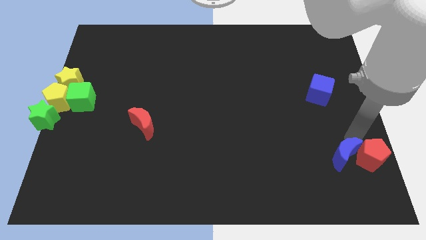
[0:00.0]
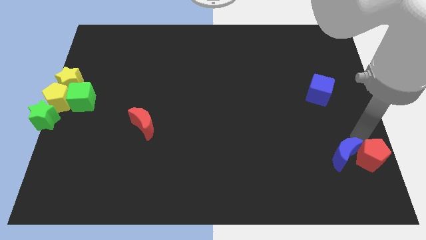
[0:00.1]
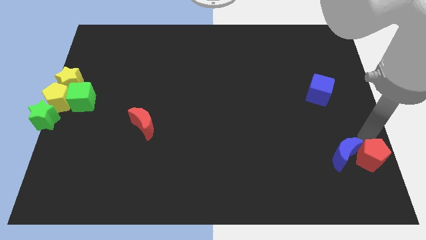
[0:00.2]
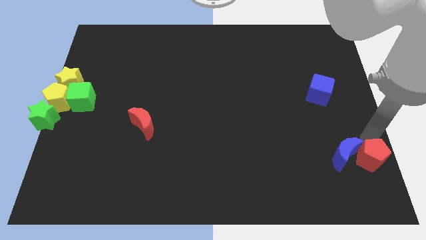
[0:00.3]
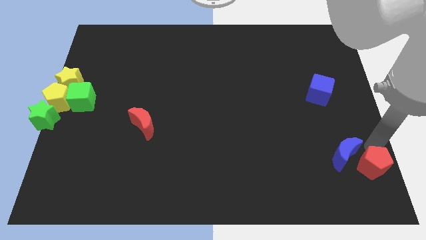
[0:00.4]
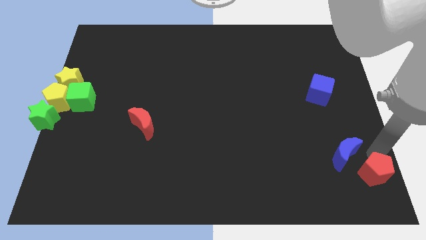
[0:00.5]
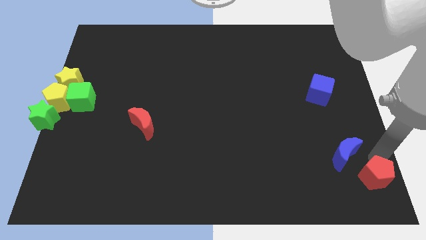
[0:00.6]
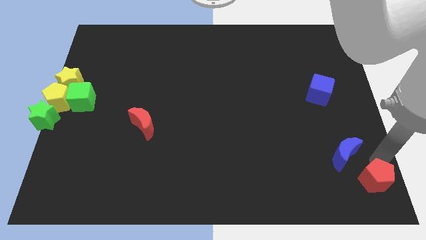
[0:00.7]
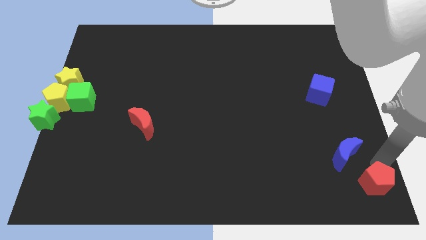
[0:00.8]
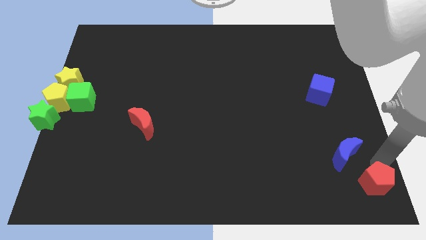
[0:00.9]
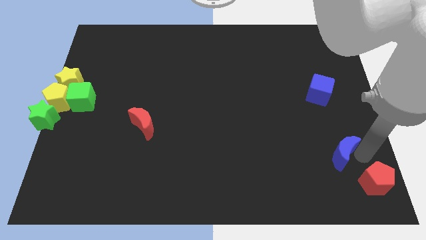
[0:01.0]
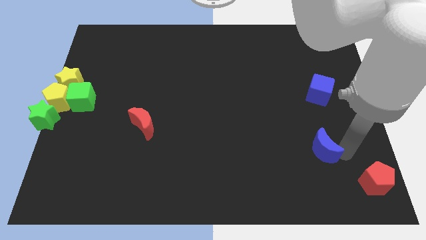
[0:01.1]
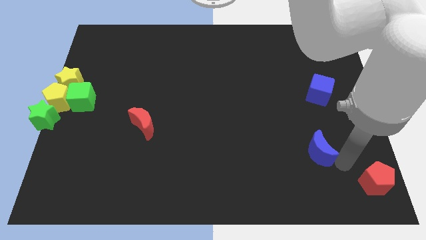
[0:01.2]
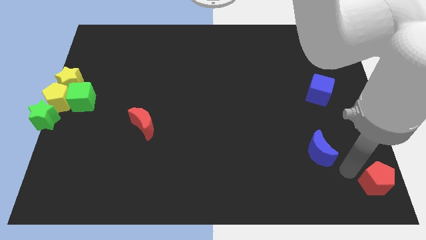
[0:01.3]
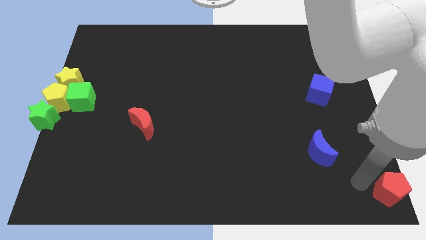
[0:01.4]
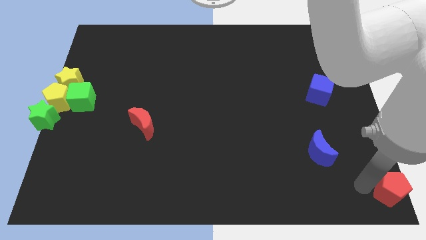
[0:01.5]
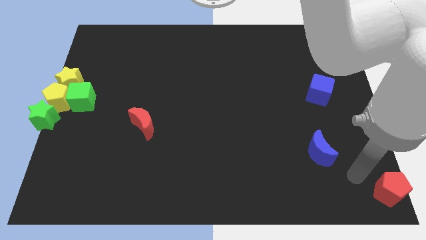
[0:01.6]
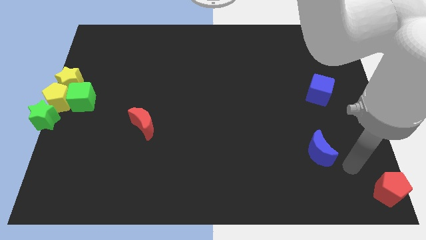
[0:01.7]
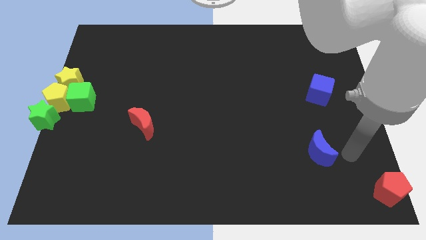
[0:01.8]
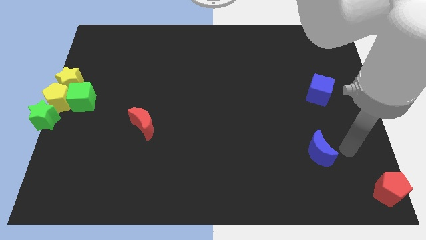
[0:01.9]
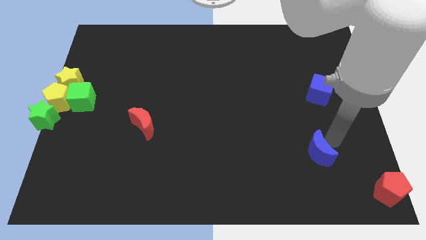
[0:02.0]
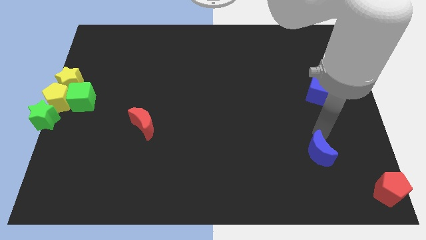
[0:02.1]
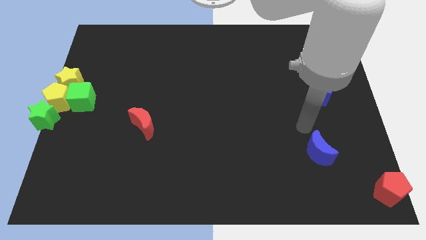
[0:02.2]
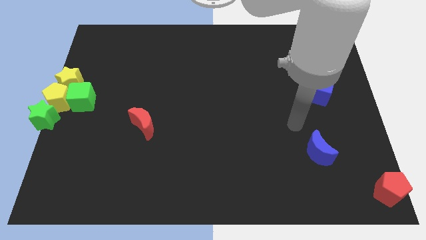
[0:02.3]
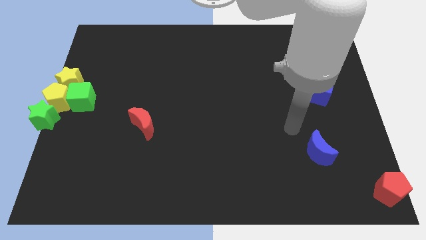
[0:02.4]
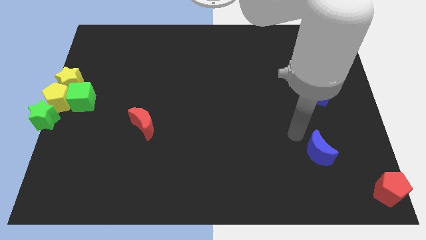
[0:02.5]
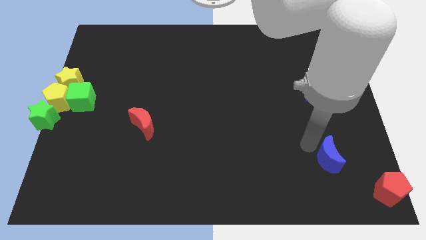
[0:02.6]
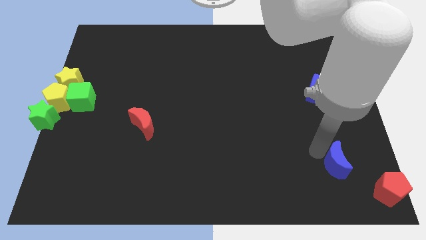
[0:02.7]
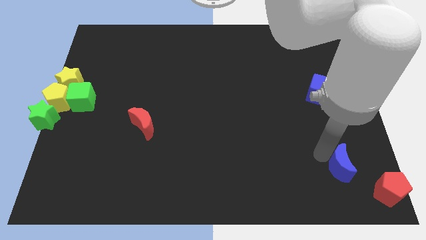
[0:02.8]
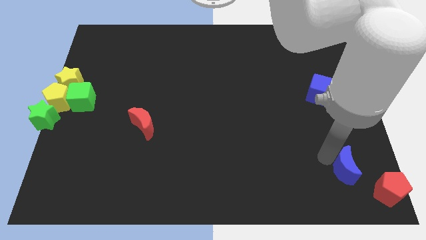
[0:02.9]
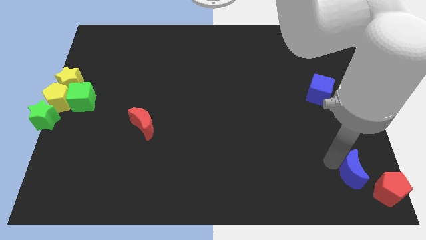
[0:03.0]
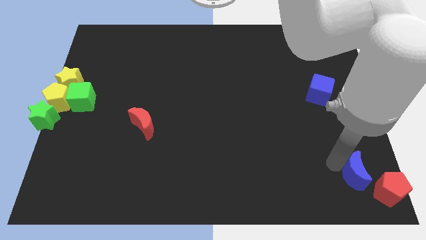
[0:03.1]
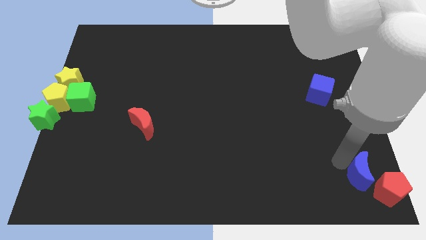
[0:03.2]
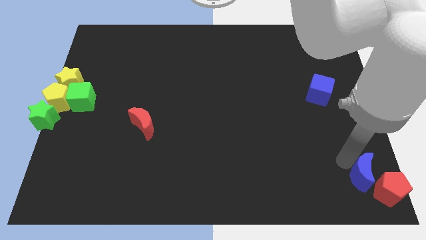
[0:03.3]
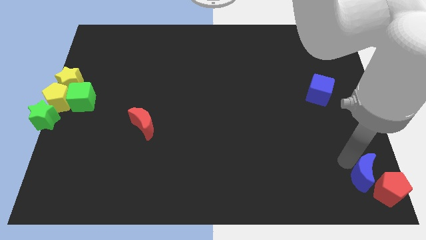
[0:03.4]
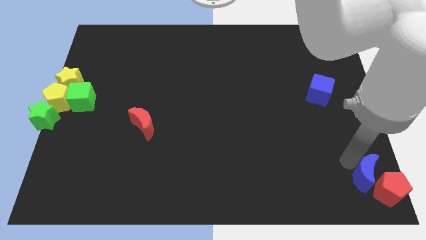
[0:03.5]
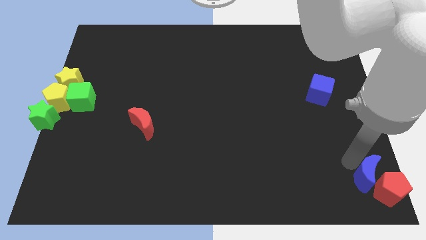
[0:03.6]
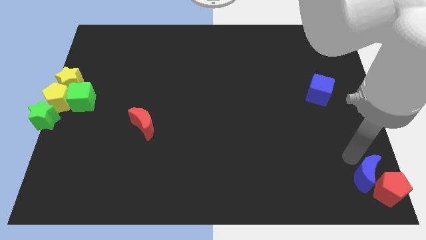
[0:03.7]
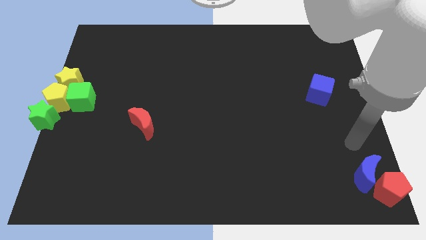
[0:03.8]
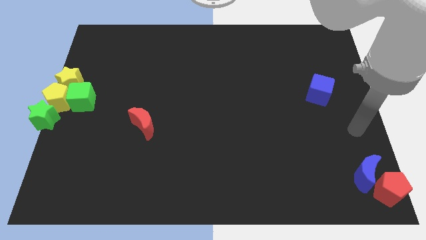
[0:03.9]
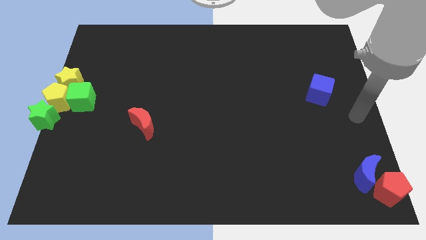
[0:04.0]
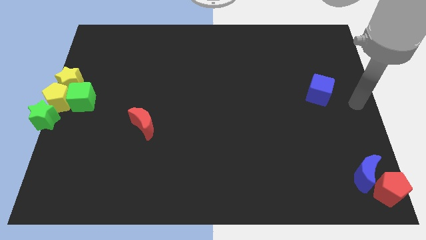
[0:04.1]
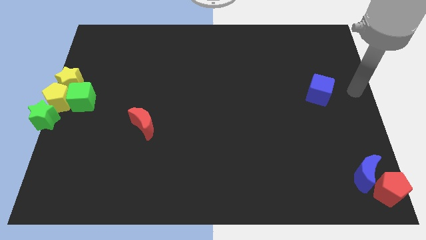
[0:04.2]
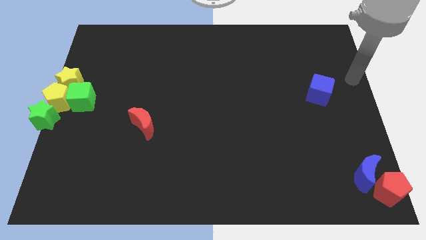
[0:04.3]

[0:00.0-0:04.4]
place the blue crescent and red pentagon at the bottom right corner of the board

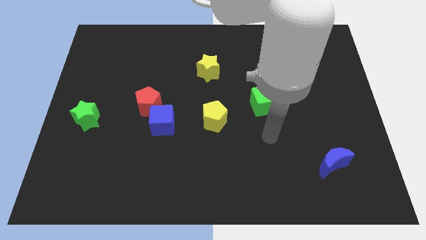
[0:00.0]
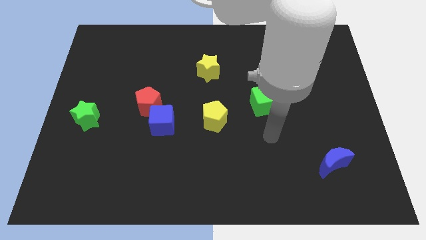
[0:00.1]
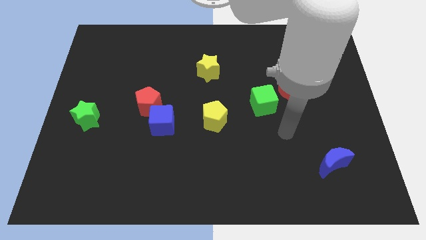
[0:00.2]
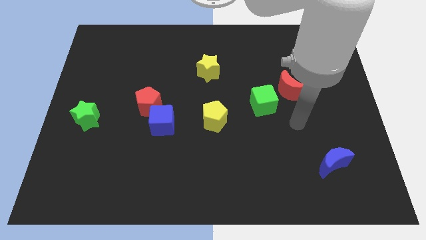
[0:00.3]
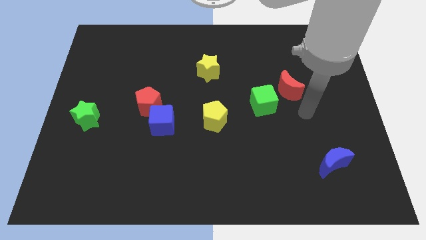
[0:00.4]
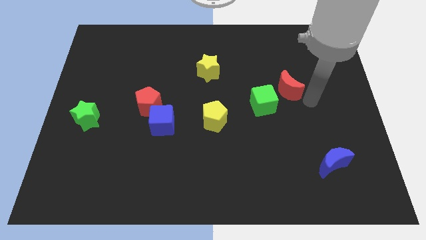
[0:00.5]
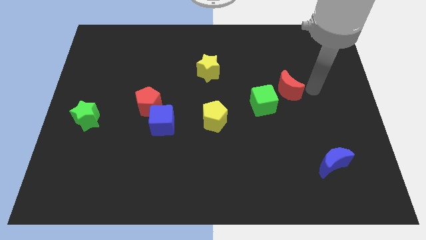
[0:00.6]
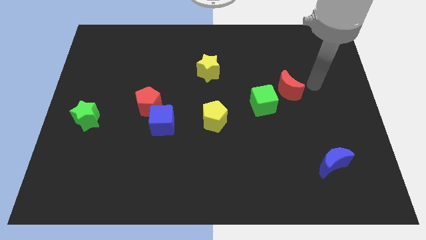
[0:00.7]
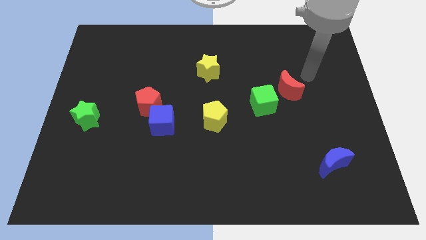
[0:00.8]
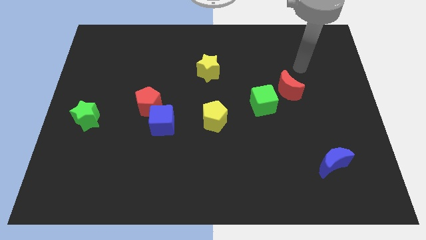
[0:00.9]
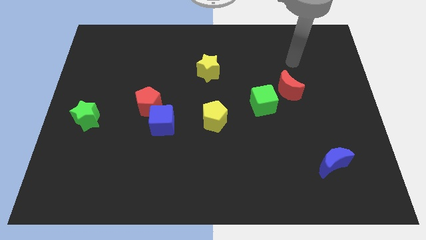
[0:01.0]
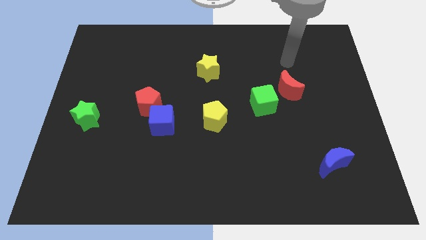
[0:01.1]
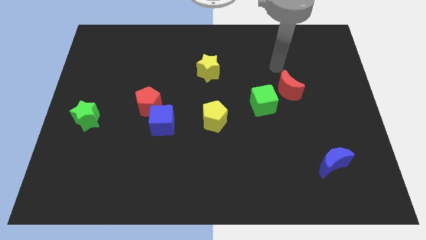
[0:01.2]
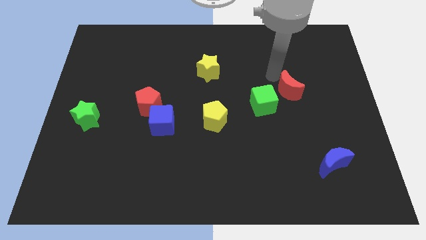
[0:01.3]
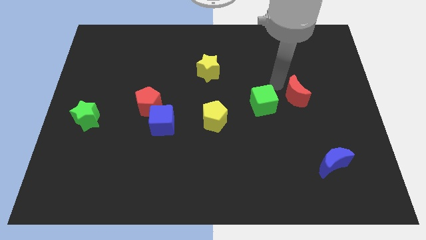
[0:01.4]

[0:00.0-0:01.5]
move yout arm towards the red crescent

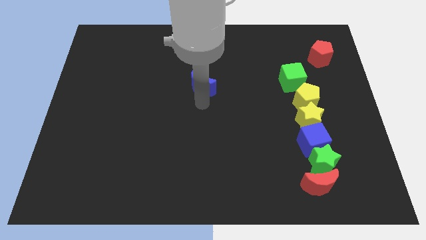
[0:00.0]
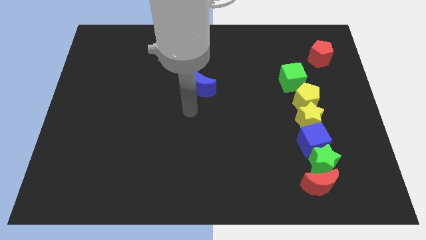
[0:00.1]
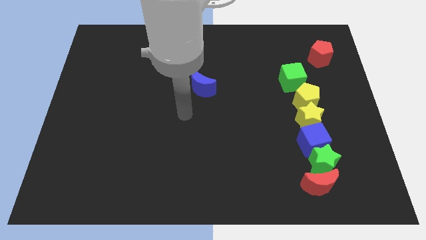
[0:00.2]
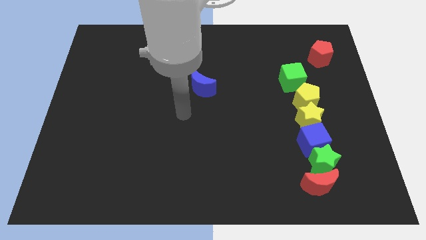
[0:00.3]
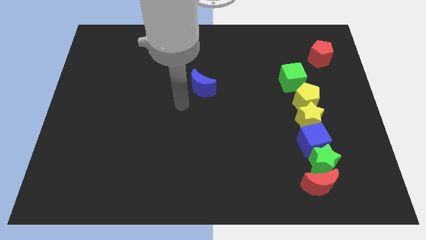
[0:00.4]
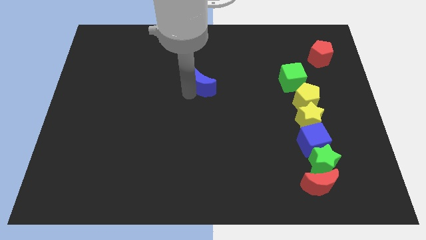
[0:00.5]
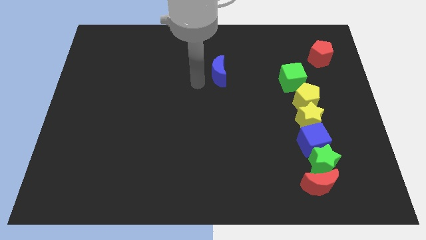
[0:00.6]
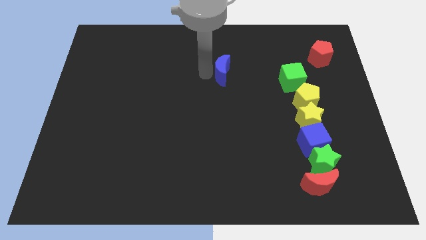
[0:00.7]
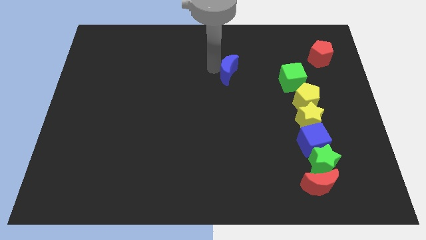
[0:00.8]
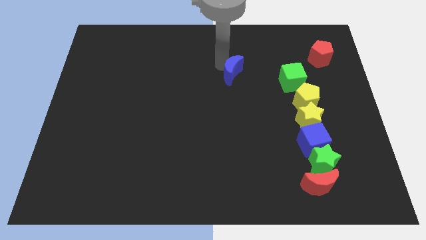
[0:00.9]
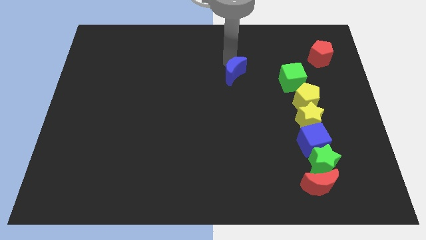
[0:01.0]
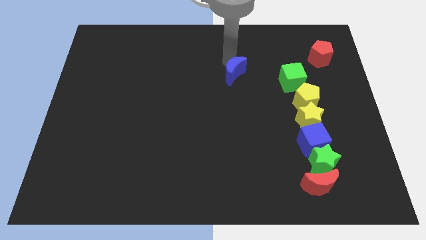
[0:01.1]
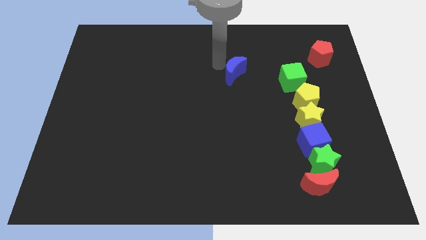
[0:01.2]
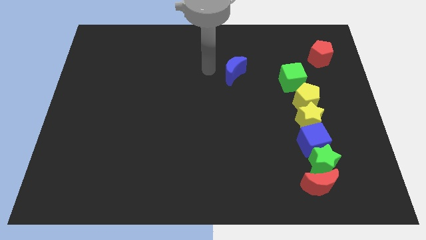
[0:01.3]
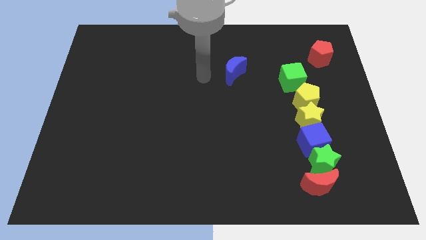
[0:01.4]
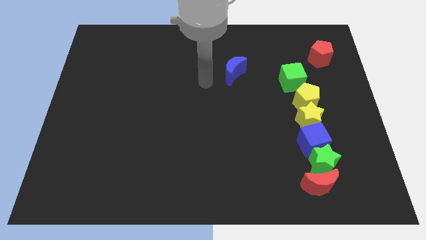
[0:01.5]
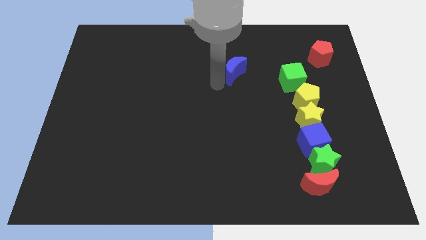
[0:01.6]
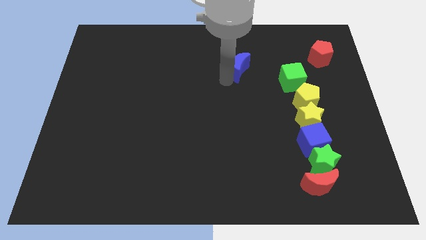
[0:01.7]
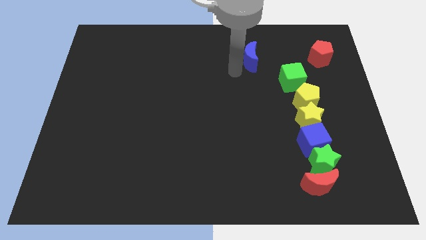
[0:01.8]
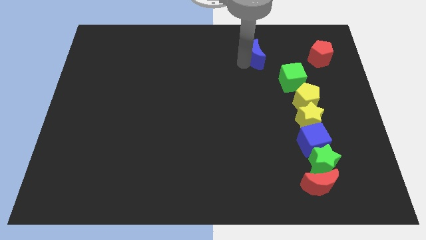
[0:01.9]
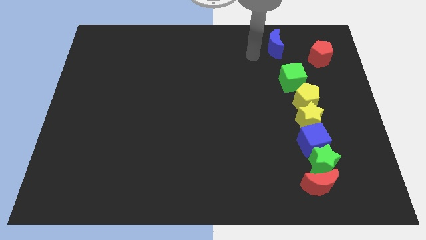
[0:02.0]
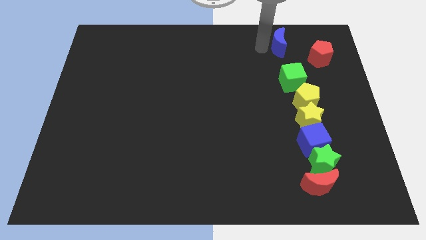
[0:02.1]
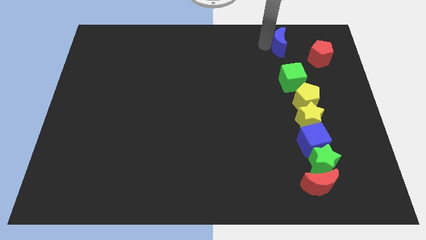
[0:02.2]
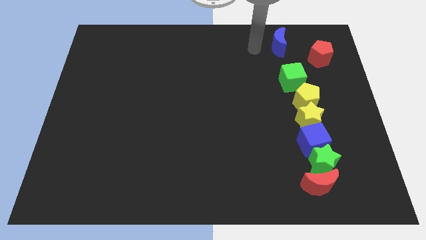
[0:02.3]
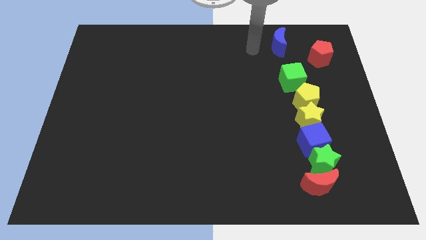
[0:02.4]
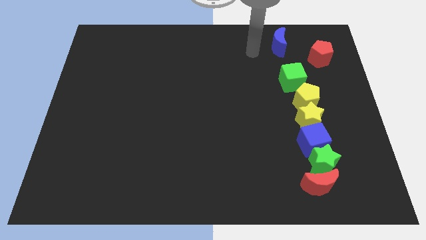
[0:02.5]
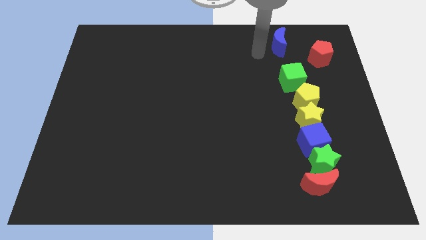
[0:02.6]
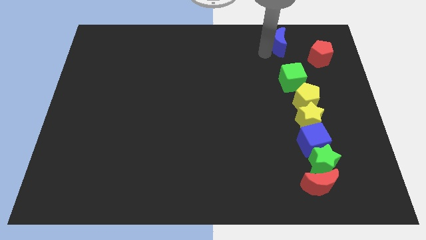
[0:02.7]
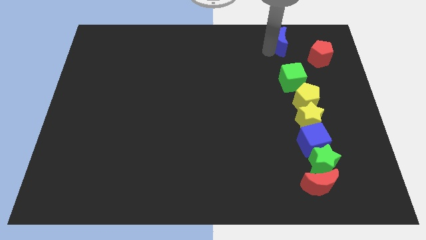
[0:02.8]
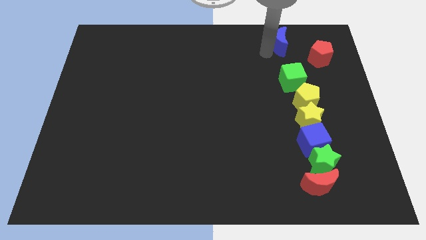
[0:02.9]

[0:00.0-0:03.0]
place the blue moon above the green cube

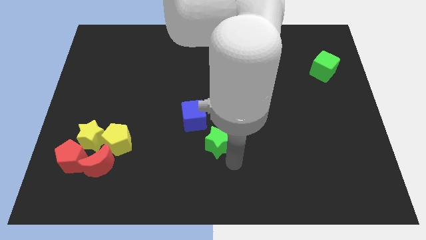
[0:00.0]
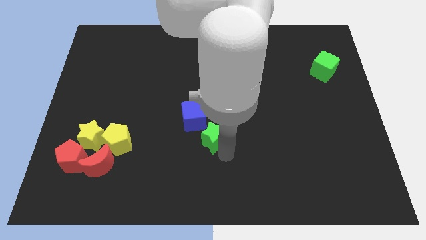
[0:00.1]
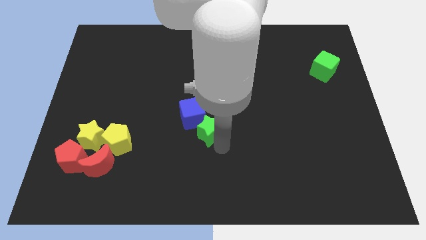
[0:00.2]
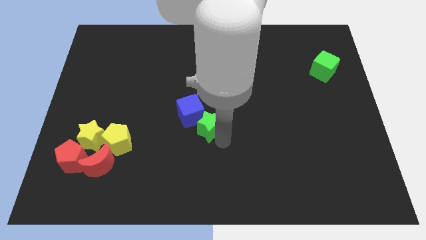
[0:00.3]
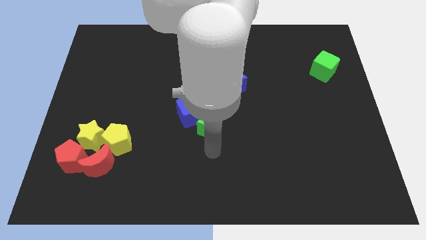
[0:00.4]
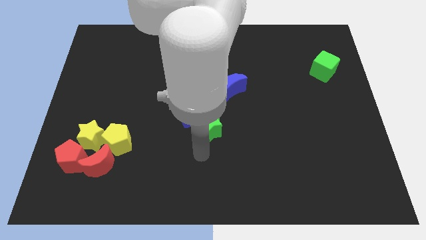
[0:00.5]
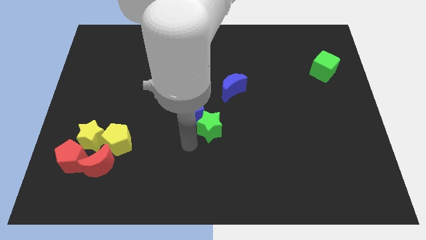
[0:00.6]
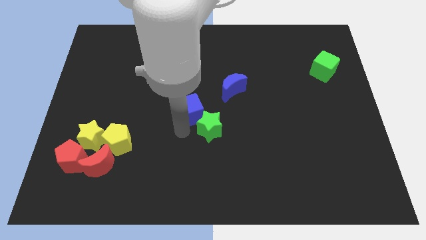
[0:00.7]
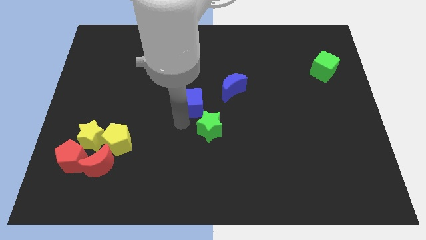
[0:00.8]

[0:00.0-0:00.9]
move the green star below the blue cube
